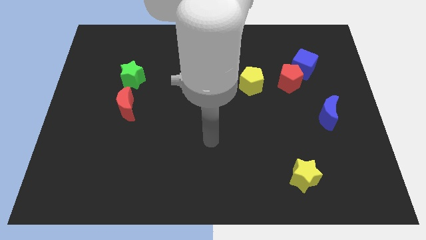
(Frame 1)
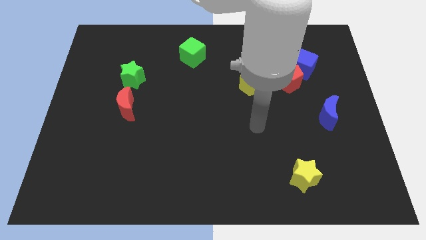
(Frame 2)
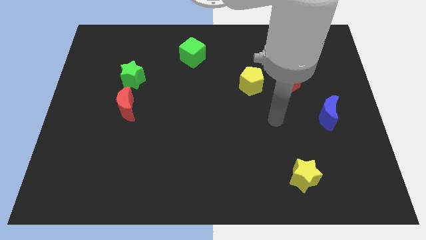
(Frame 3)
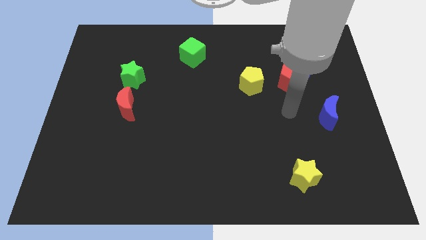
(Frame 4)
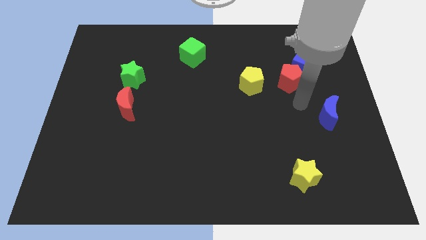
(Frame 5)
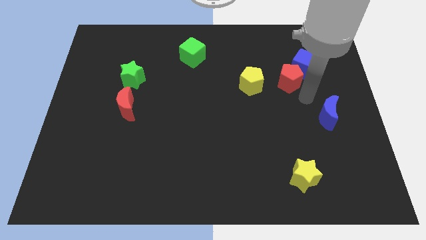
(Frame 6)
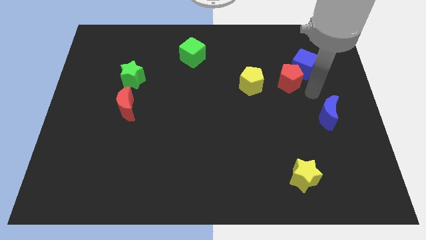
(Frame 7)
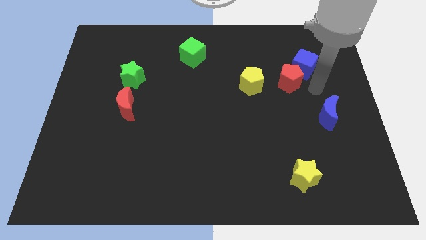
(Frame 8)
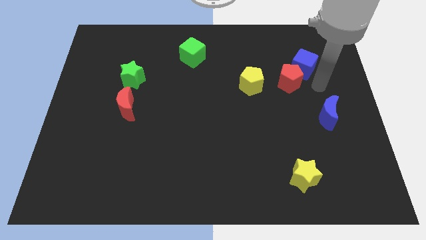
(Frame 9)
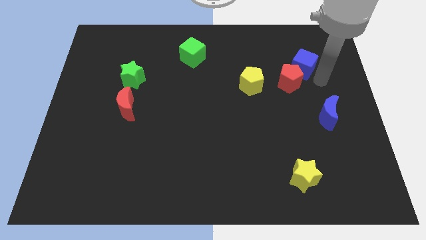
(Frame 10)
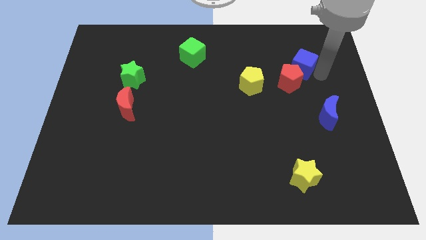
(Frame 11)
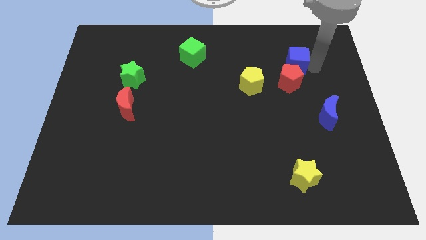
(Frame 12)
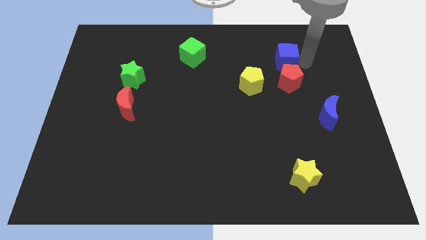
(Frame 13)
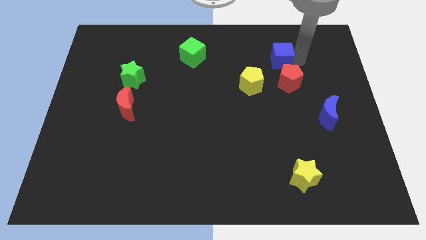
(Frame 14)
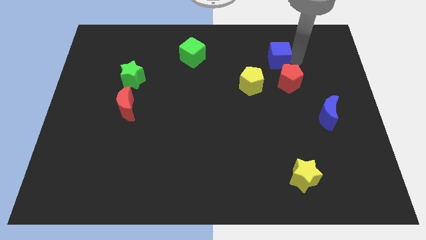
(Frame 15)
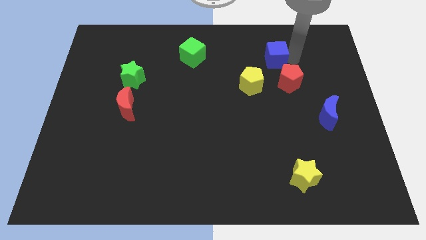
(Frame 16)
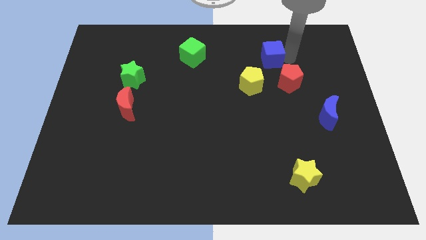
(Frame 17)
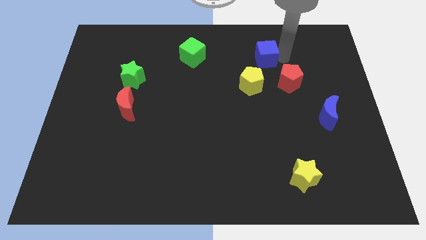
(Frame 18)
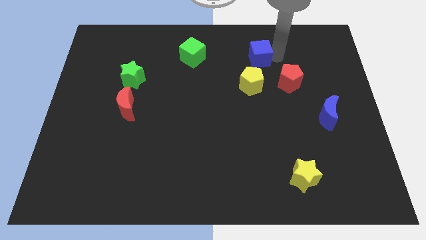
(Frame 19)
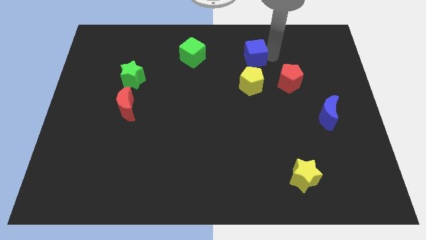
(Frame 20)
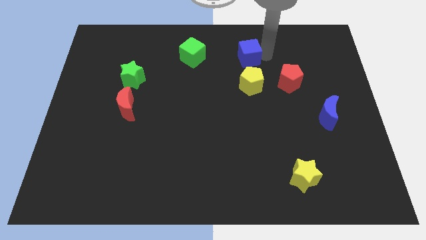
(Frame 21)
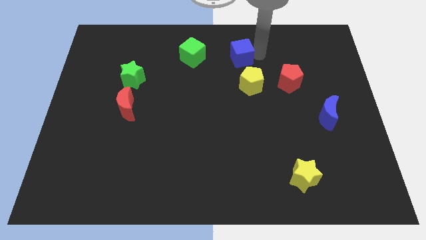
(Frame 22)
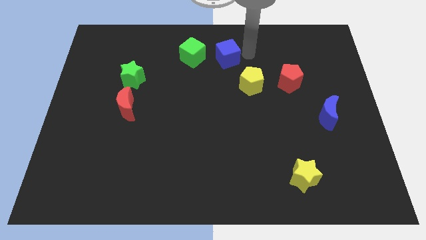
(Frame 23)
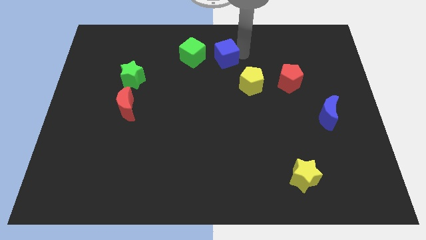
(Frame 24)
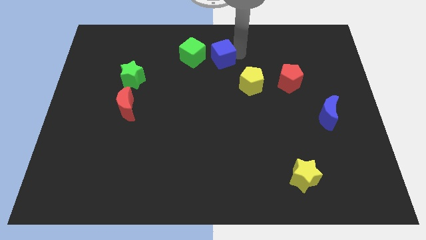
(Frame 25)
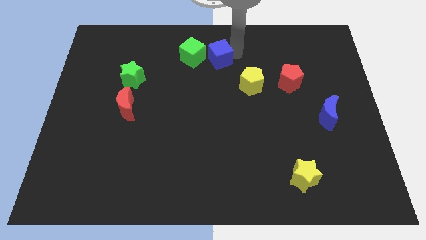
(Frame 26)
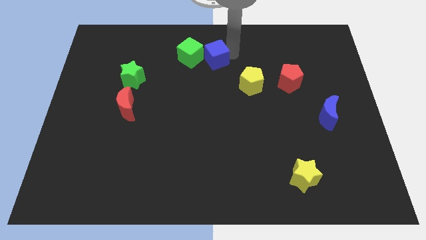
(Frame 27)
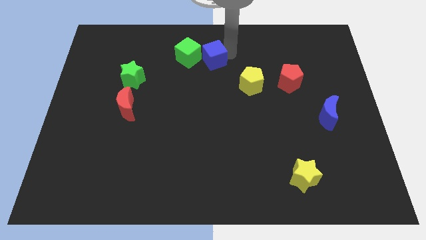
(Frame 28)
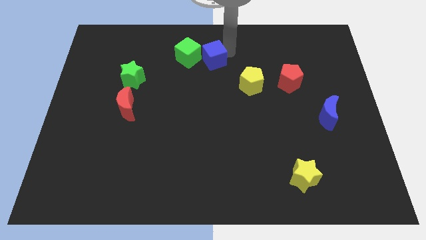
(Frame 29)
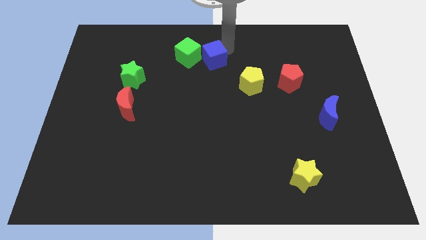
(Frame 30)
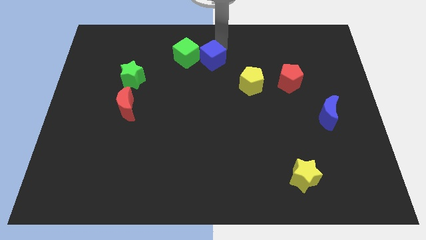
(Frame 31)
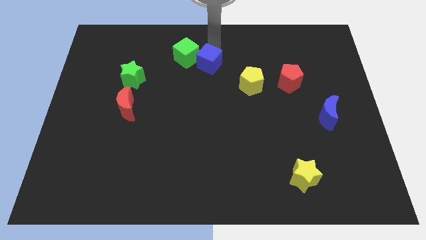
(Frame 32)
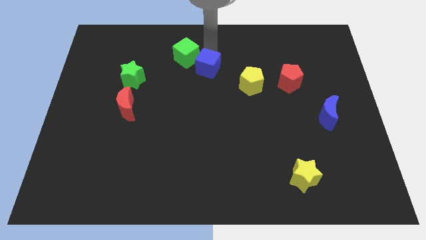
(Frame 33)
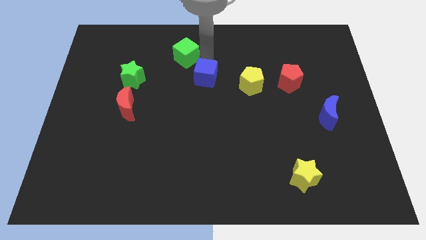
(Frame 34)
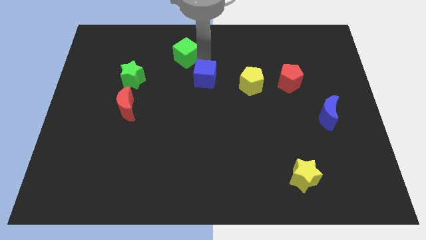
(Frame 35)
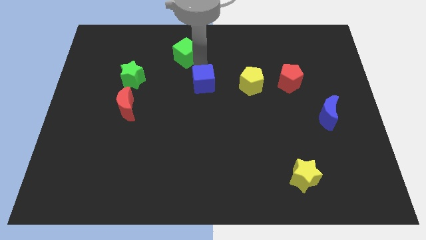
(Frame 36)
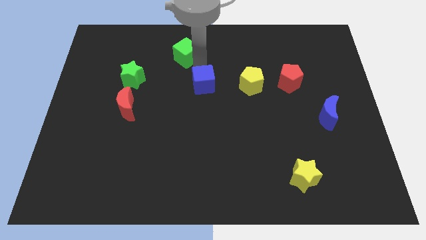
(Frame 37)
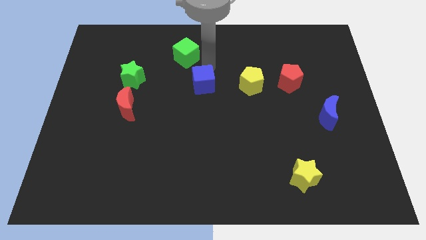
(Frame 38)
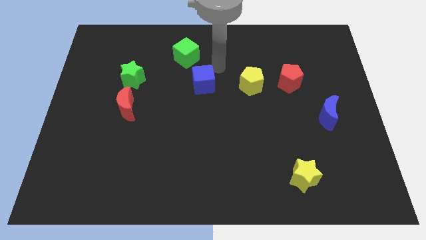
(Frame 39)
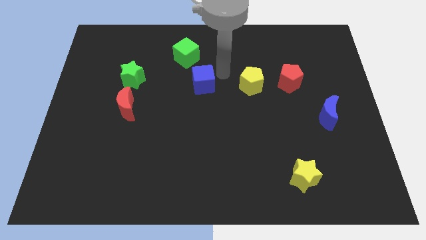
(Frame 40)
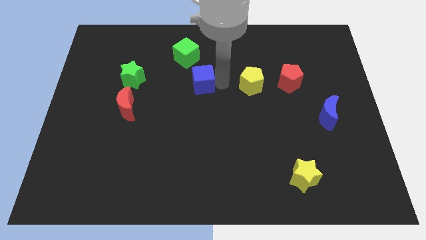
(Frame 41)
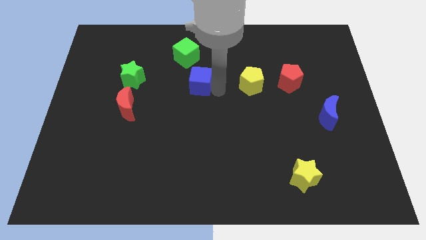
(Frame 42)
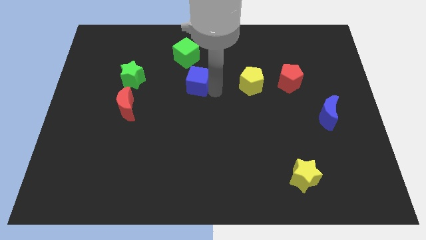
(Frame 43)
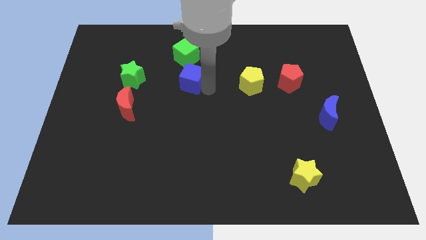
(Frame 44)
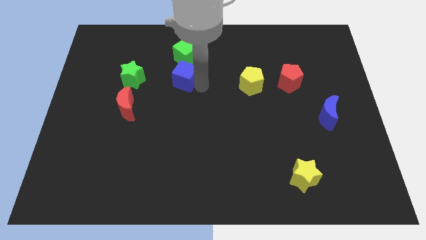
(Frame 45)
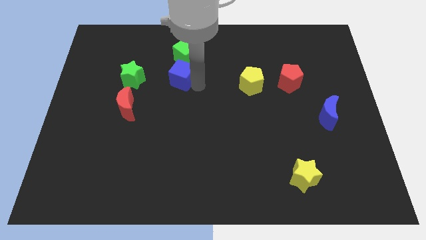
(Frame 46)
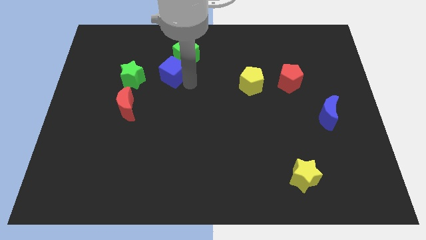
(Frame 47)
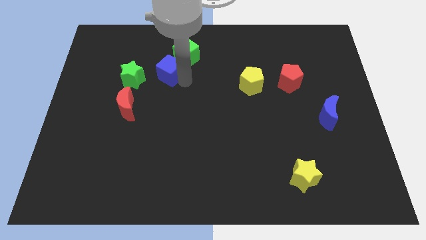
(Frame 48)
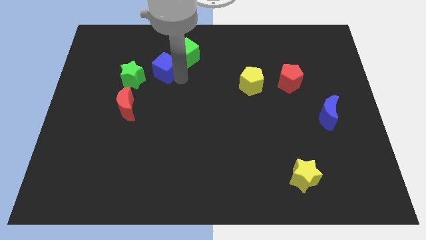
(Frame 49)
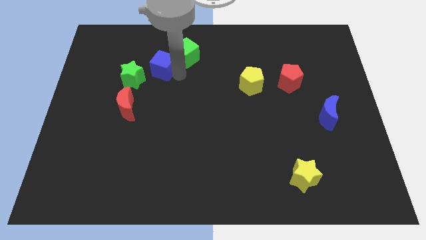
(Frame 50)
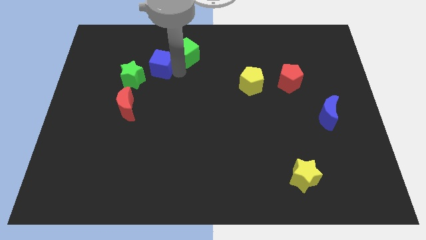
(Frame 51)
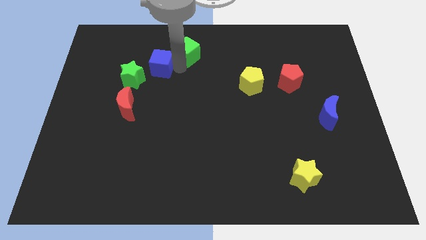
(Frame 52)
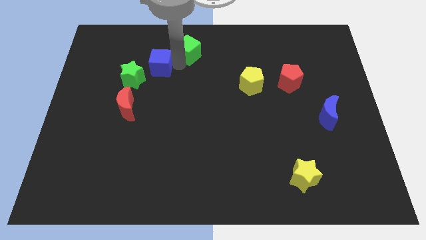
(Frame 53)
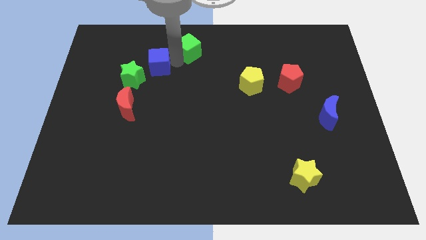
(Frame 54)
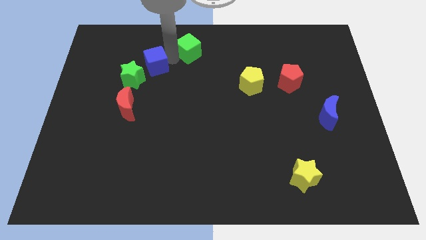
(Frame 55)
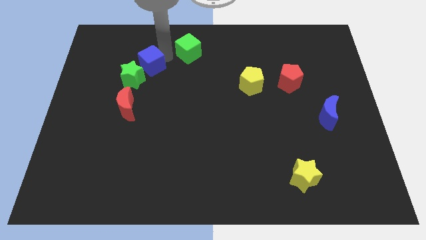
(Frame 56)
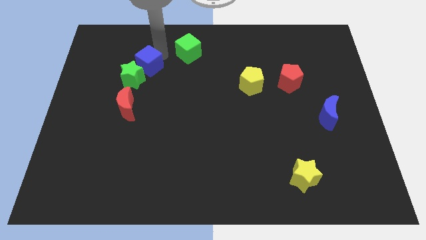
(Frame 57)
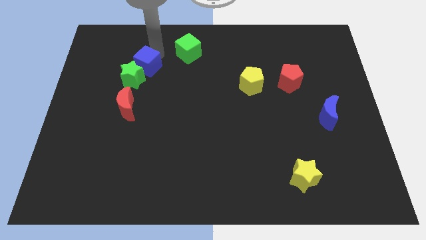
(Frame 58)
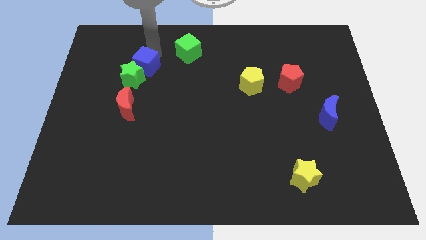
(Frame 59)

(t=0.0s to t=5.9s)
move the blue cube next to the green star

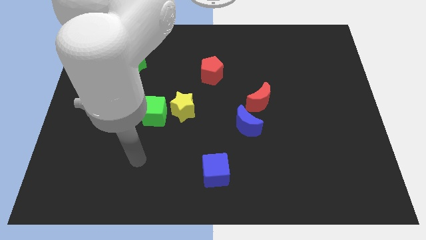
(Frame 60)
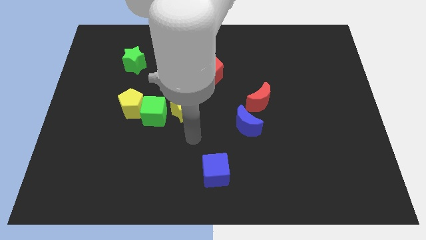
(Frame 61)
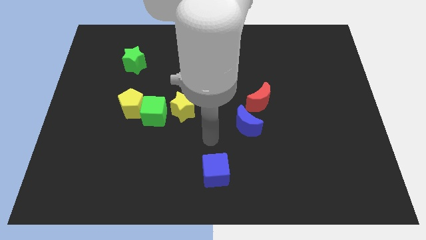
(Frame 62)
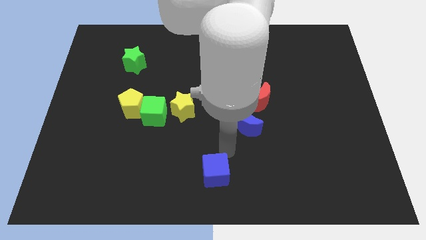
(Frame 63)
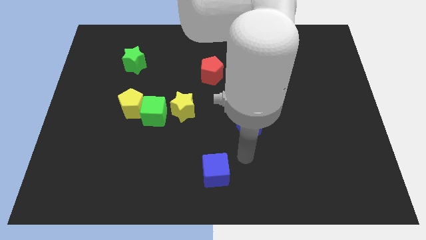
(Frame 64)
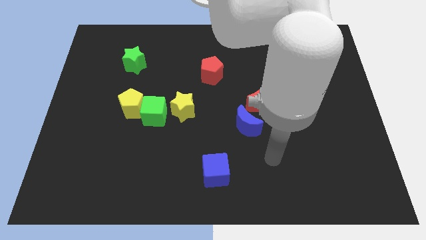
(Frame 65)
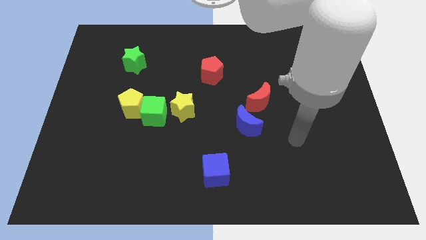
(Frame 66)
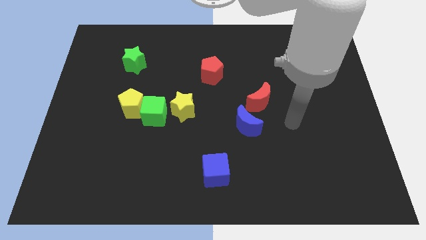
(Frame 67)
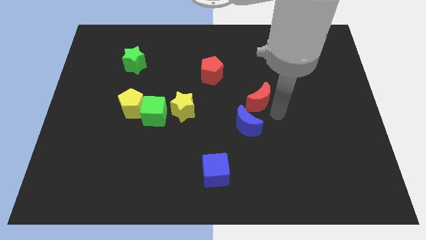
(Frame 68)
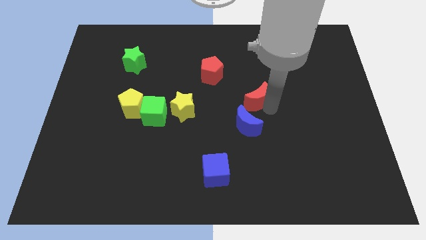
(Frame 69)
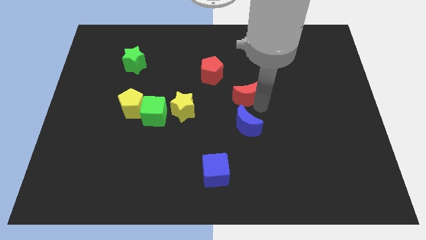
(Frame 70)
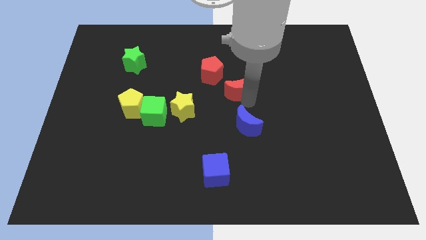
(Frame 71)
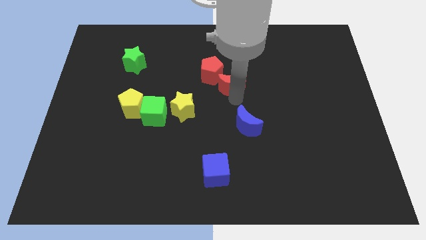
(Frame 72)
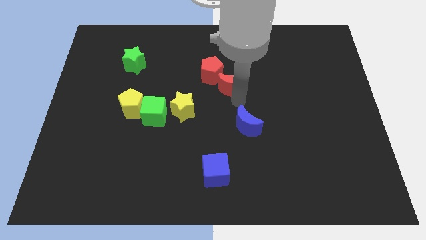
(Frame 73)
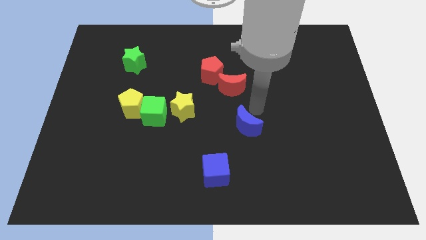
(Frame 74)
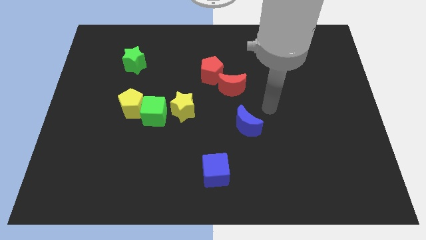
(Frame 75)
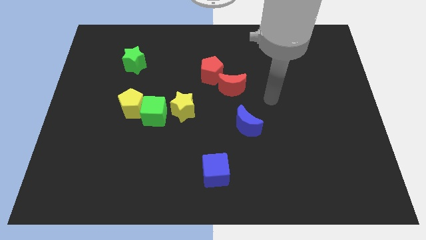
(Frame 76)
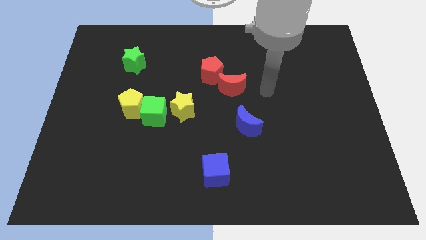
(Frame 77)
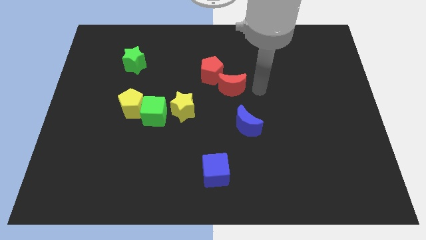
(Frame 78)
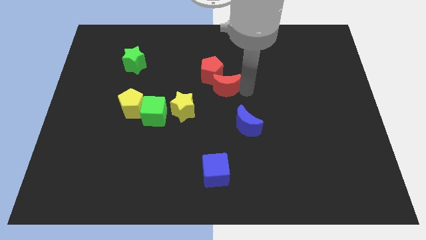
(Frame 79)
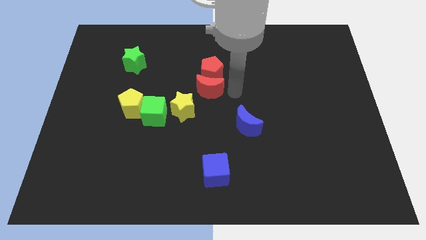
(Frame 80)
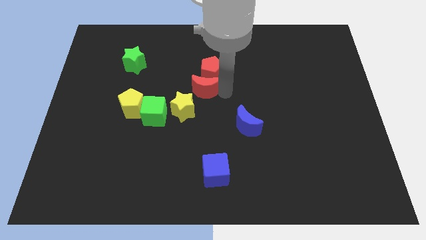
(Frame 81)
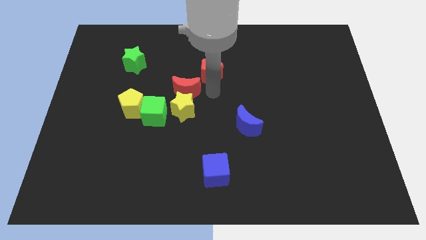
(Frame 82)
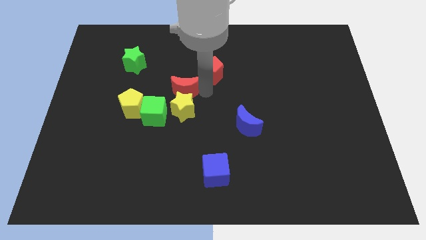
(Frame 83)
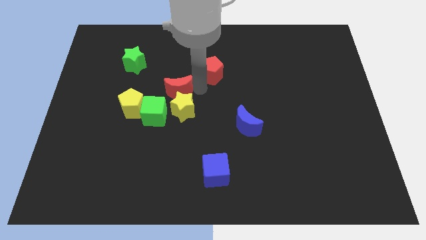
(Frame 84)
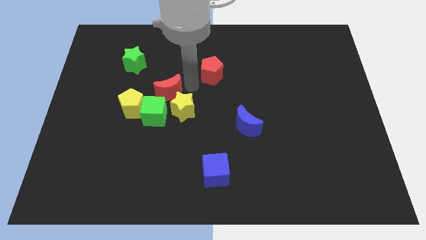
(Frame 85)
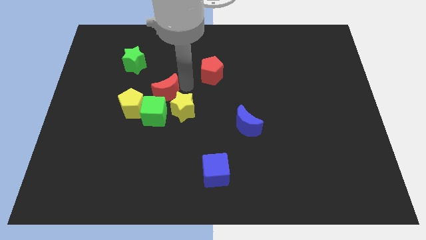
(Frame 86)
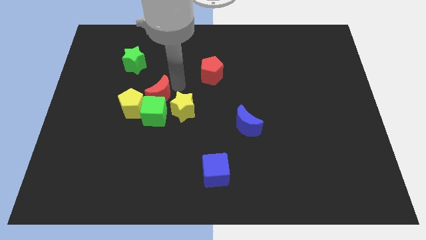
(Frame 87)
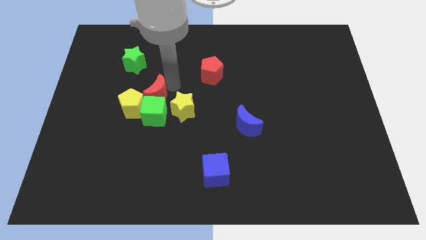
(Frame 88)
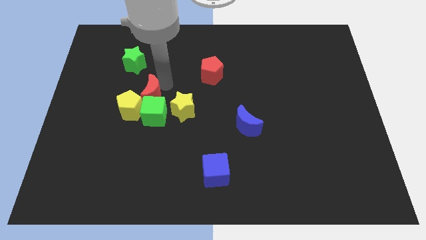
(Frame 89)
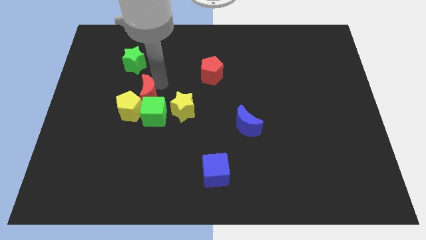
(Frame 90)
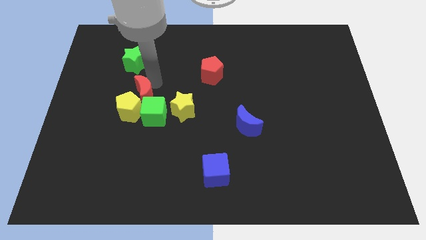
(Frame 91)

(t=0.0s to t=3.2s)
move the red moon next to the yellow pentagon
